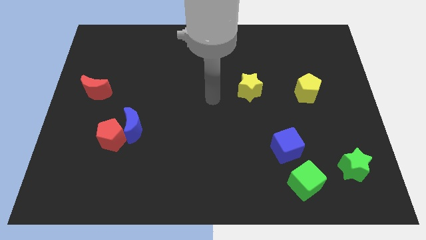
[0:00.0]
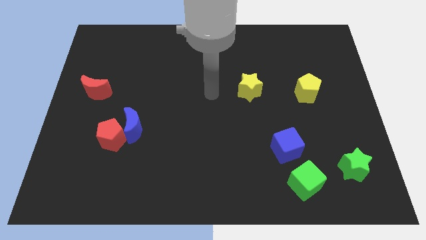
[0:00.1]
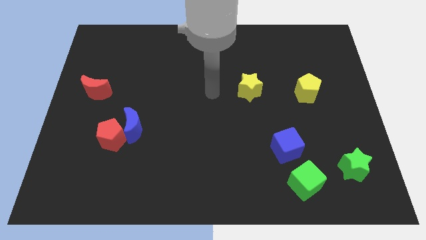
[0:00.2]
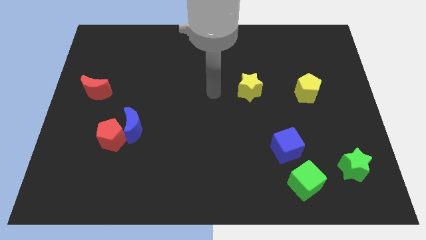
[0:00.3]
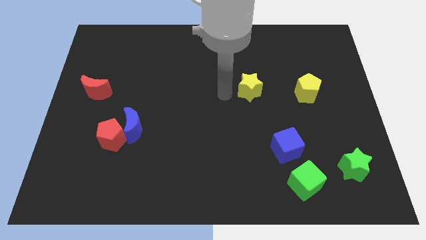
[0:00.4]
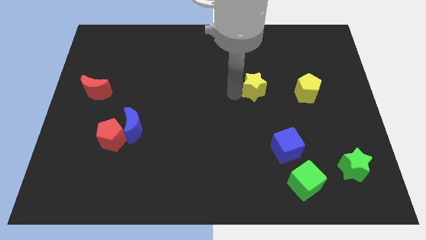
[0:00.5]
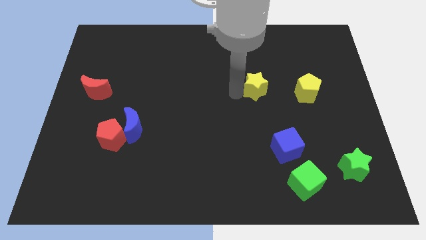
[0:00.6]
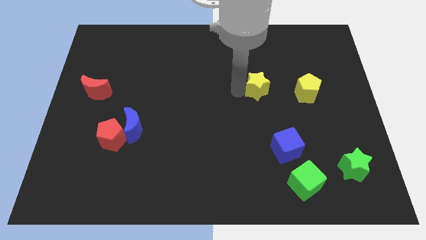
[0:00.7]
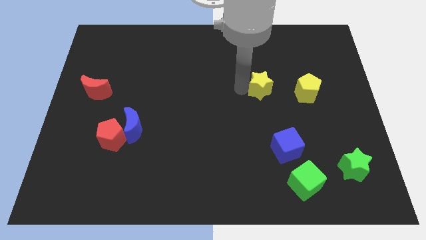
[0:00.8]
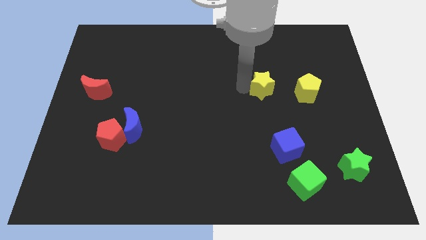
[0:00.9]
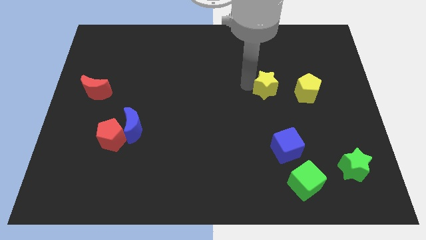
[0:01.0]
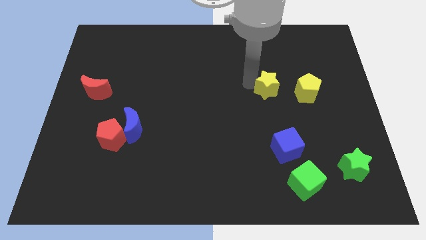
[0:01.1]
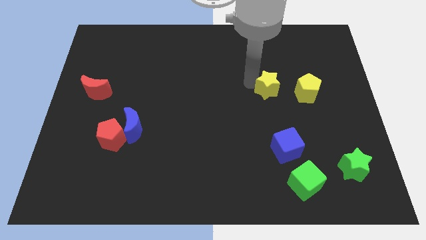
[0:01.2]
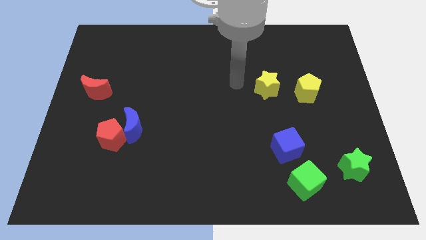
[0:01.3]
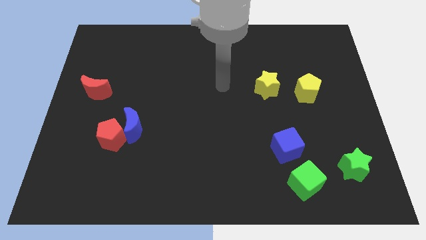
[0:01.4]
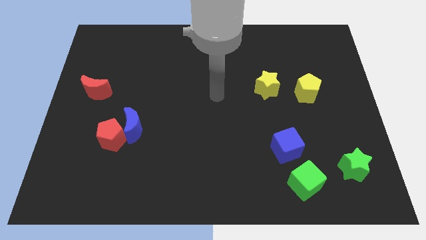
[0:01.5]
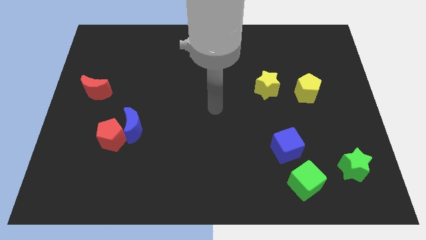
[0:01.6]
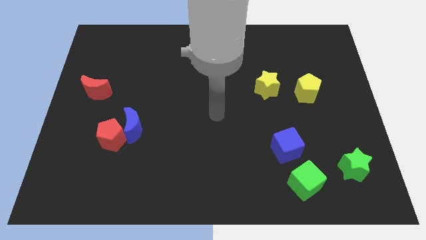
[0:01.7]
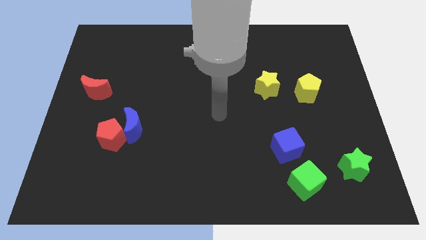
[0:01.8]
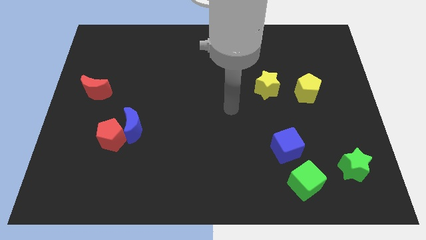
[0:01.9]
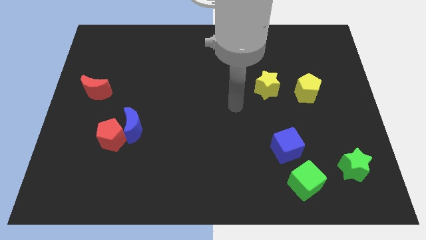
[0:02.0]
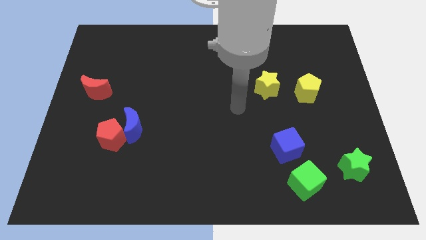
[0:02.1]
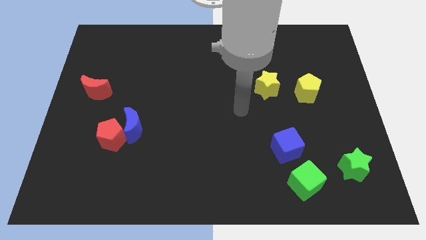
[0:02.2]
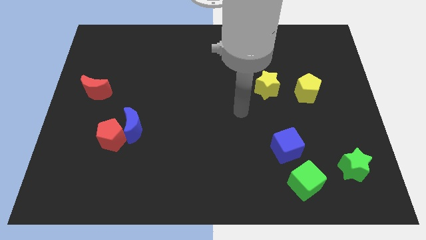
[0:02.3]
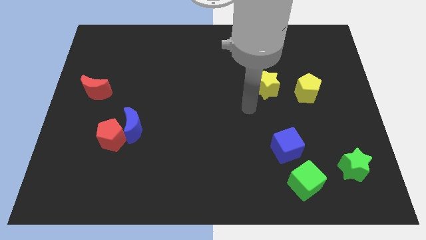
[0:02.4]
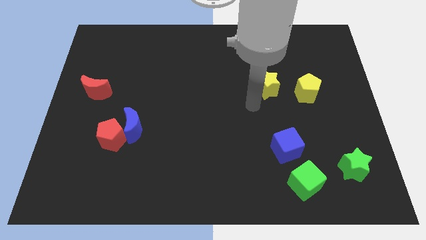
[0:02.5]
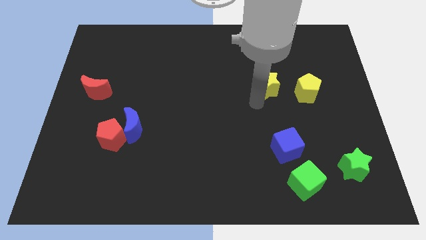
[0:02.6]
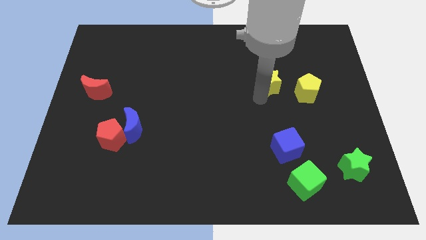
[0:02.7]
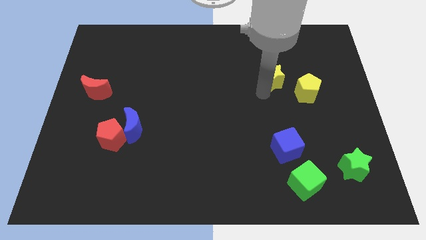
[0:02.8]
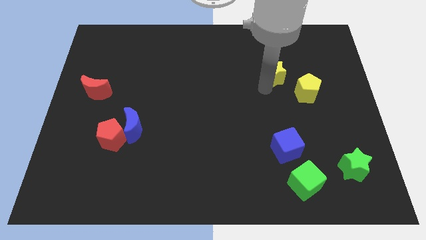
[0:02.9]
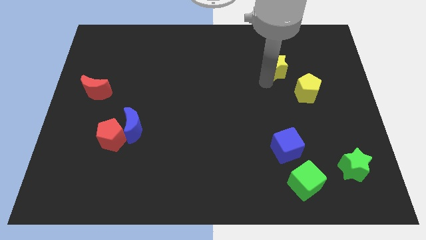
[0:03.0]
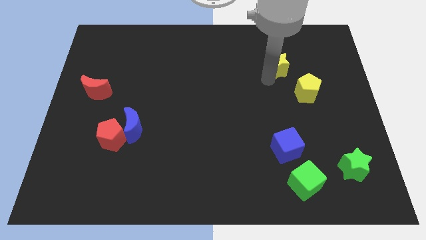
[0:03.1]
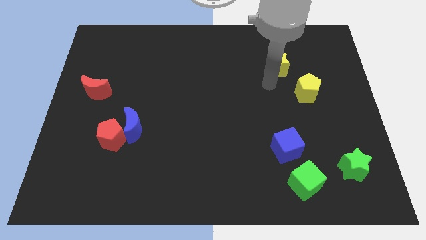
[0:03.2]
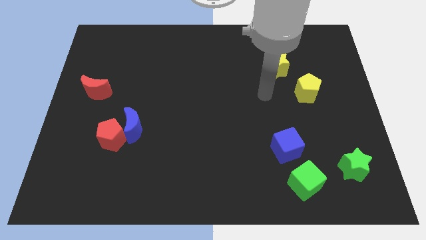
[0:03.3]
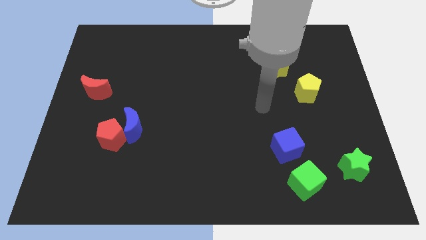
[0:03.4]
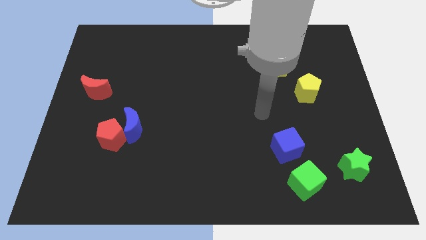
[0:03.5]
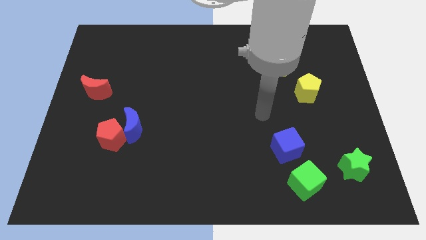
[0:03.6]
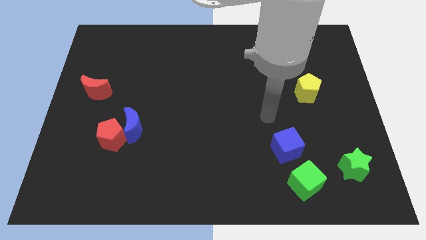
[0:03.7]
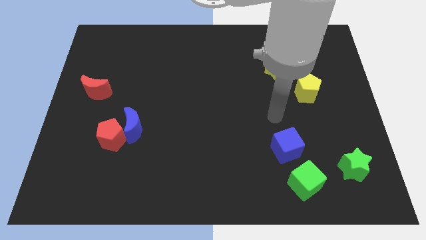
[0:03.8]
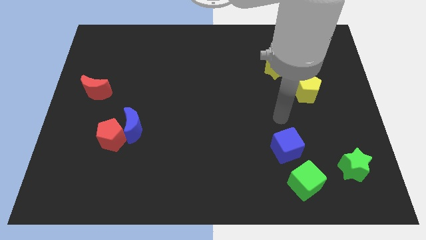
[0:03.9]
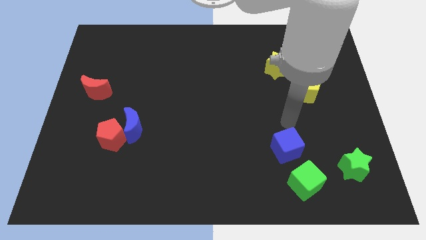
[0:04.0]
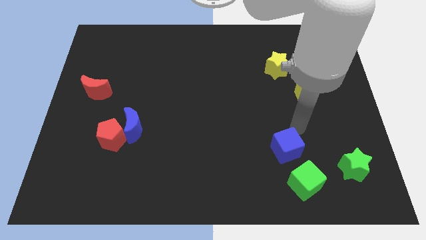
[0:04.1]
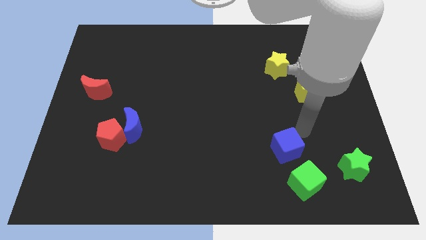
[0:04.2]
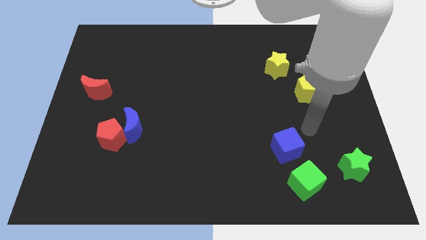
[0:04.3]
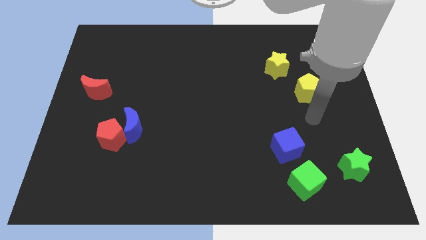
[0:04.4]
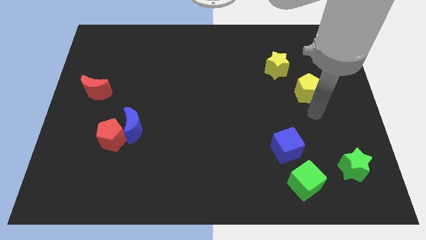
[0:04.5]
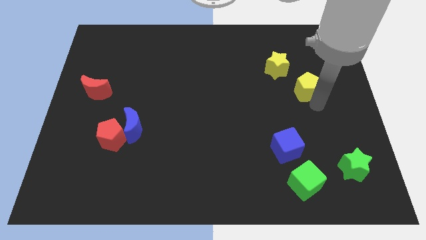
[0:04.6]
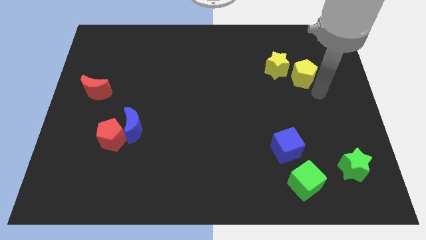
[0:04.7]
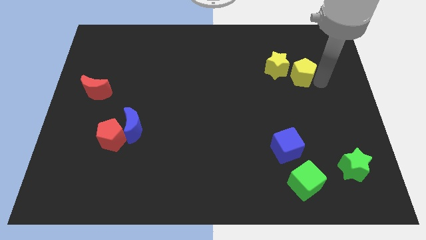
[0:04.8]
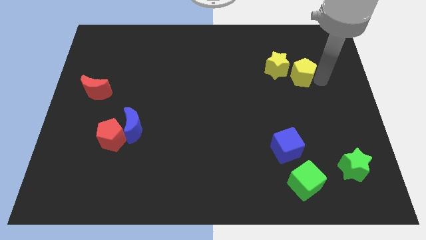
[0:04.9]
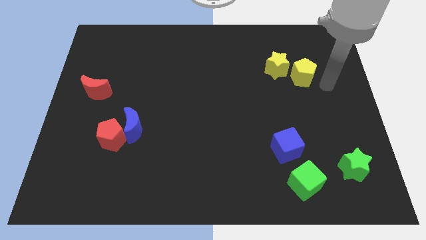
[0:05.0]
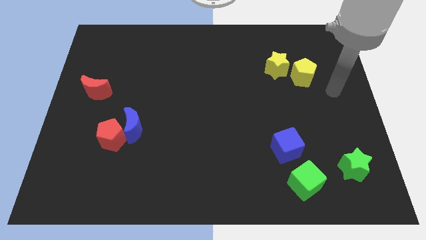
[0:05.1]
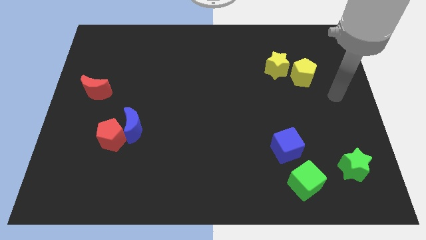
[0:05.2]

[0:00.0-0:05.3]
push the yellow blocks slightly to the top

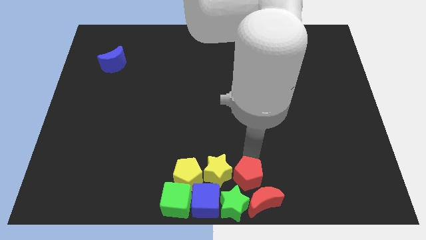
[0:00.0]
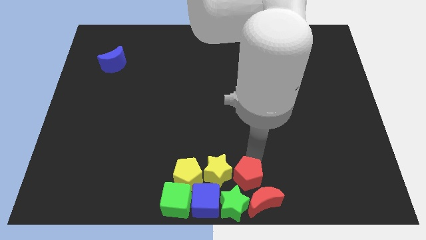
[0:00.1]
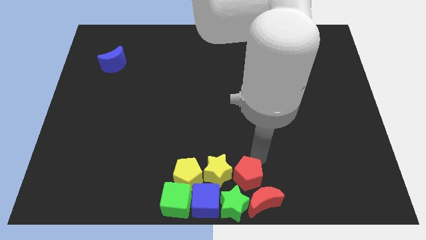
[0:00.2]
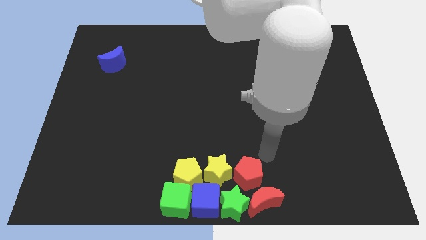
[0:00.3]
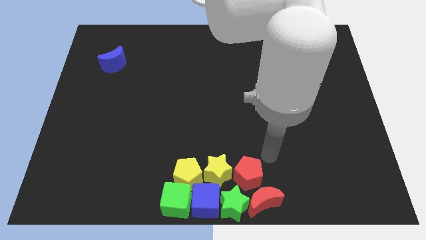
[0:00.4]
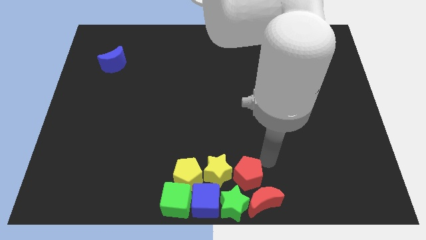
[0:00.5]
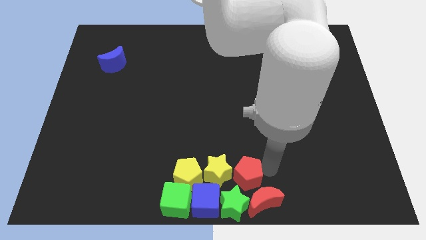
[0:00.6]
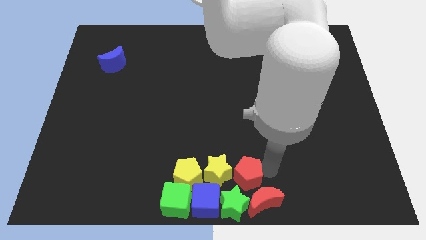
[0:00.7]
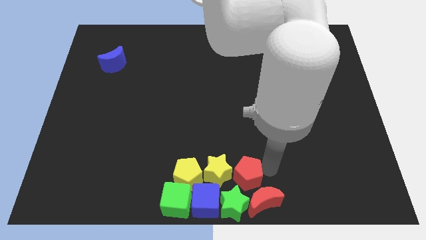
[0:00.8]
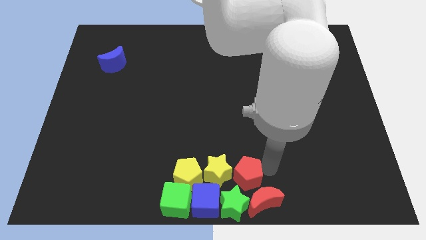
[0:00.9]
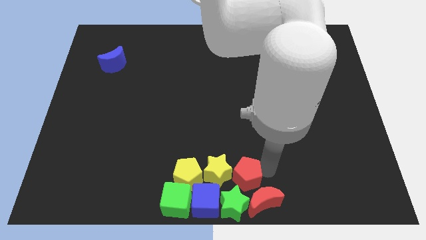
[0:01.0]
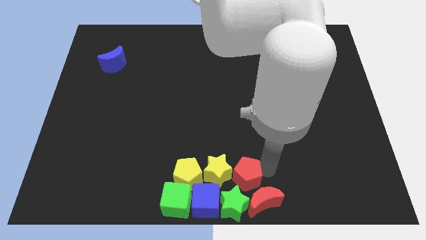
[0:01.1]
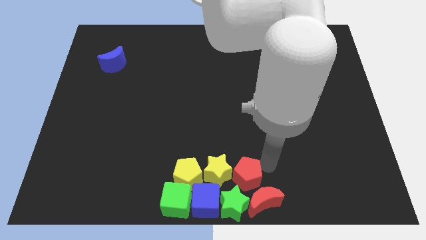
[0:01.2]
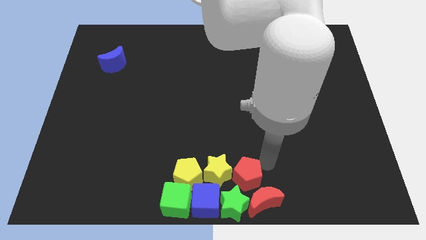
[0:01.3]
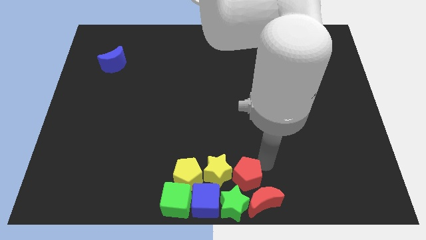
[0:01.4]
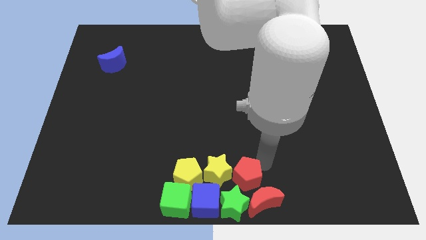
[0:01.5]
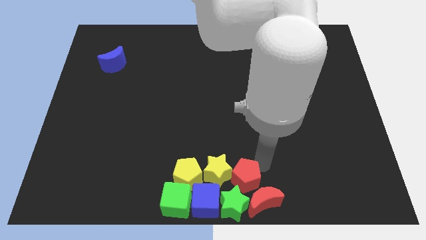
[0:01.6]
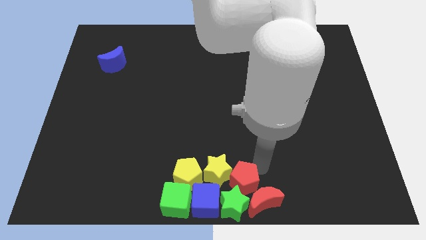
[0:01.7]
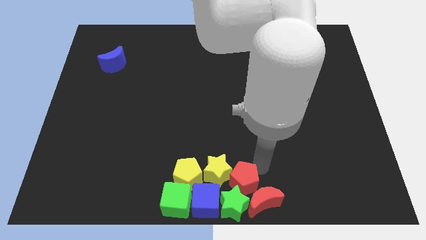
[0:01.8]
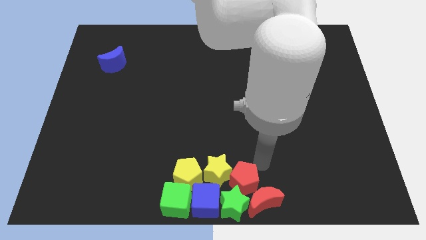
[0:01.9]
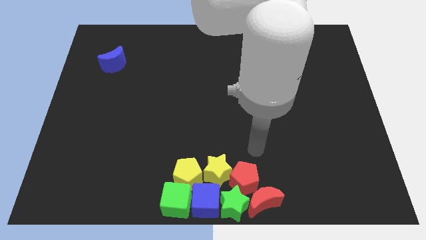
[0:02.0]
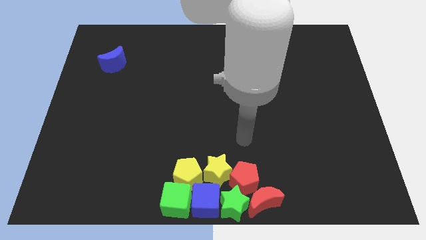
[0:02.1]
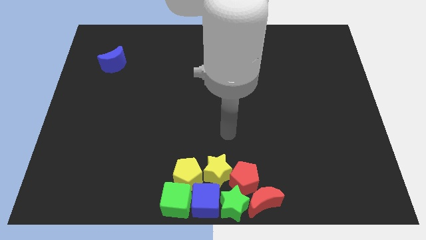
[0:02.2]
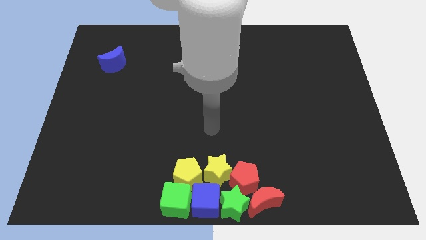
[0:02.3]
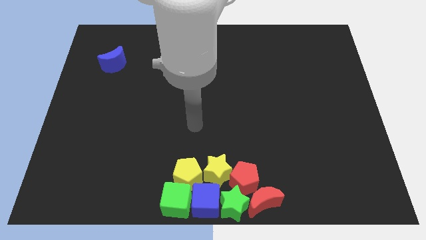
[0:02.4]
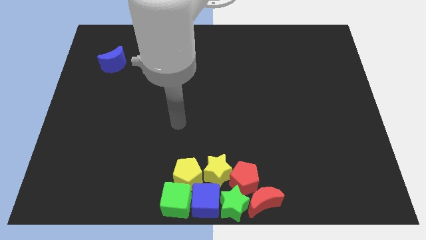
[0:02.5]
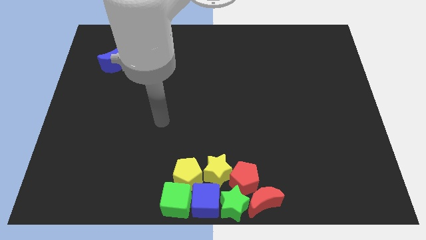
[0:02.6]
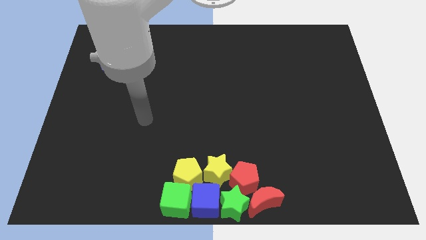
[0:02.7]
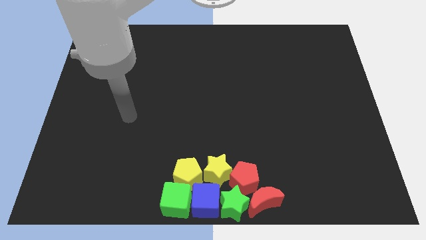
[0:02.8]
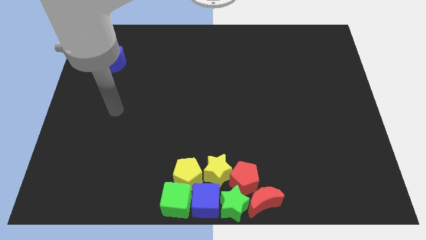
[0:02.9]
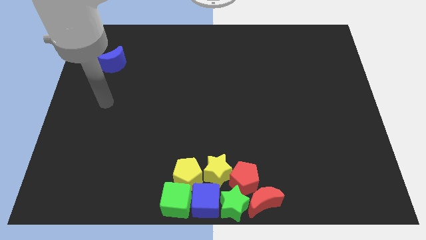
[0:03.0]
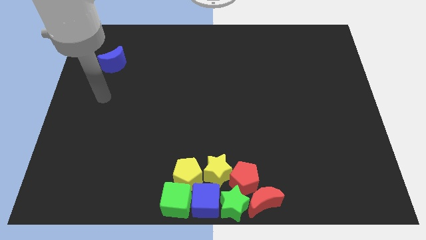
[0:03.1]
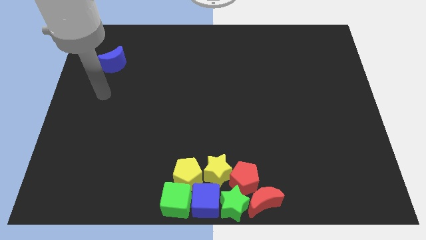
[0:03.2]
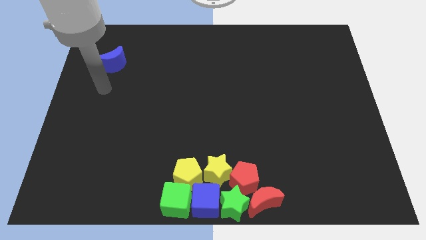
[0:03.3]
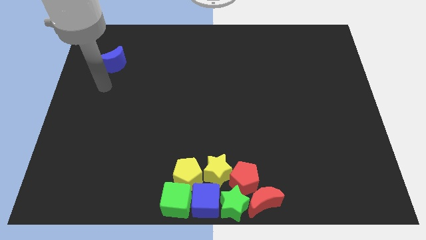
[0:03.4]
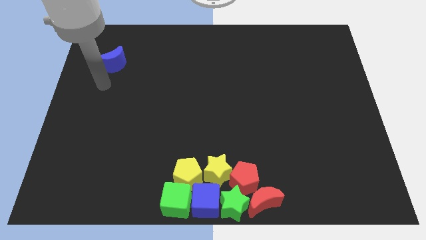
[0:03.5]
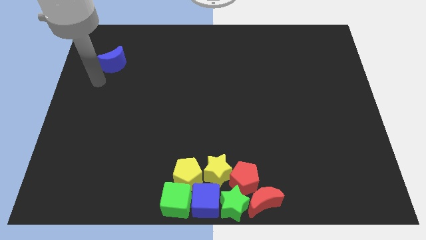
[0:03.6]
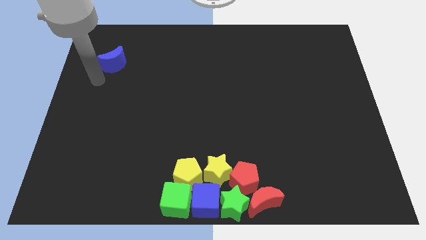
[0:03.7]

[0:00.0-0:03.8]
move the arm away from the red pentagon
